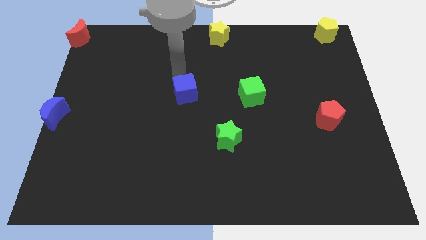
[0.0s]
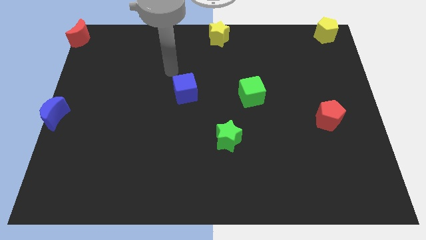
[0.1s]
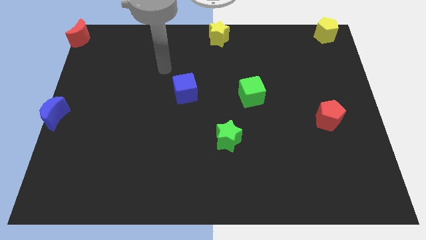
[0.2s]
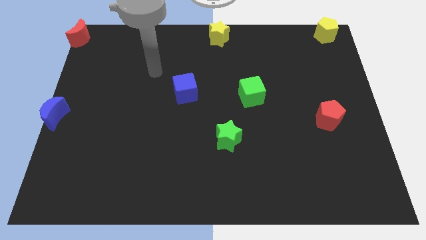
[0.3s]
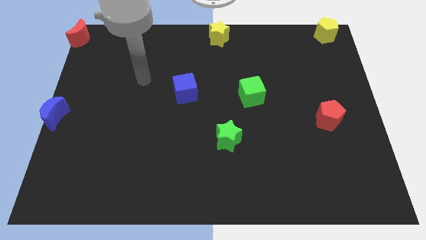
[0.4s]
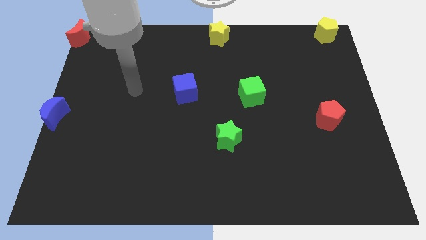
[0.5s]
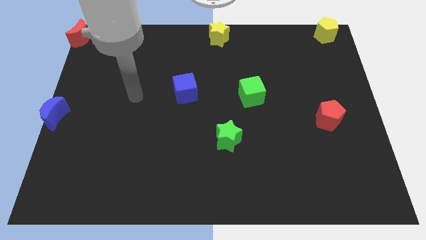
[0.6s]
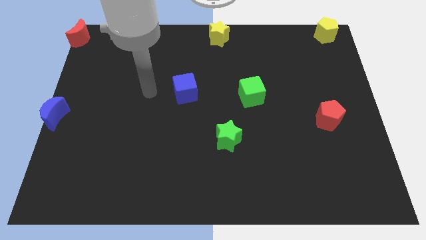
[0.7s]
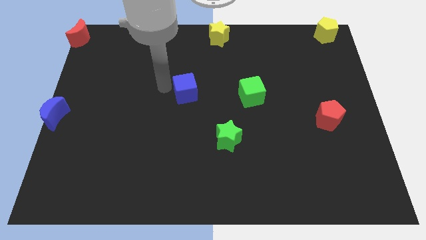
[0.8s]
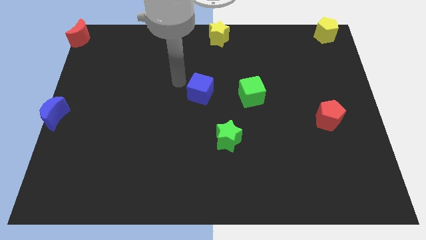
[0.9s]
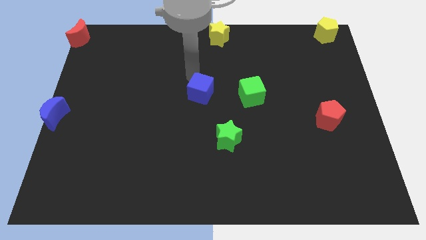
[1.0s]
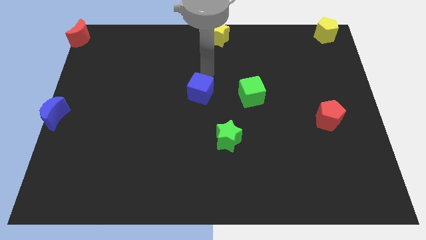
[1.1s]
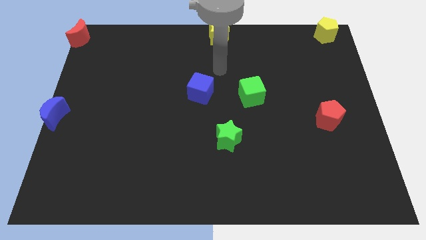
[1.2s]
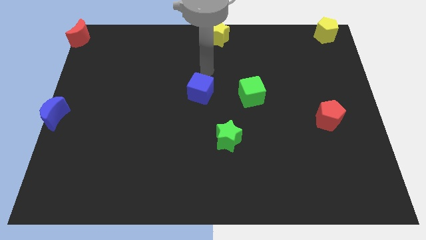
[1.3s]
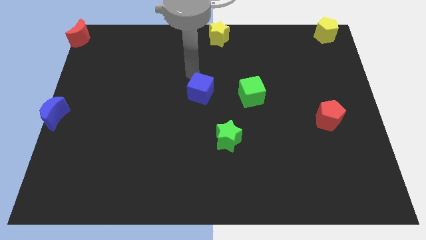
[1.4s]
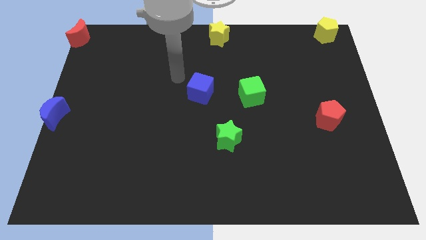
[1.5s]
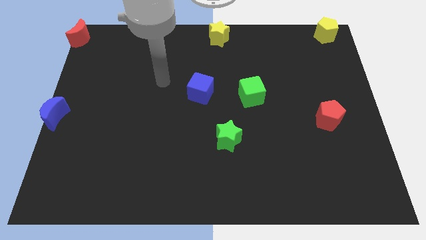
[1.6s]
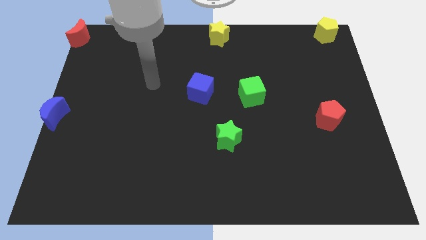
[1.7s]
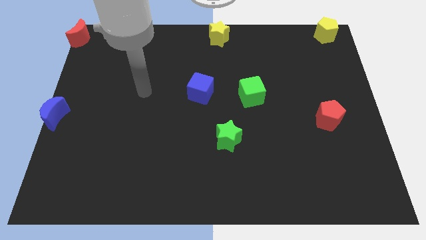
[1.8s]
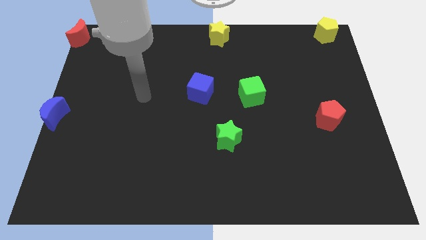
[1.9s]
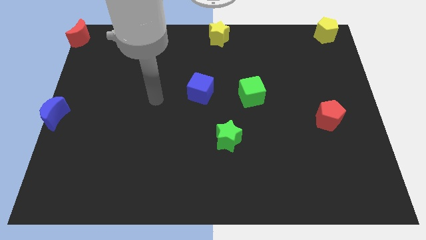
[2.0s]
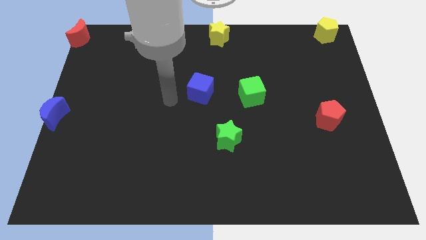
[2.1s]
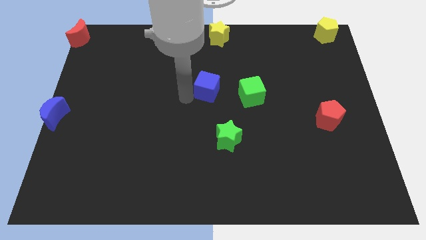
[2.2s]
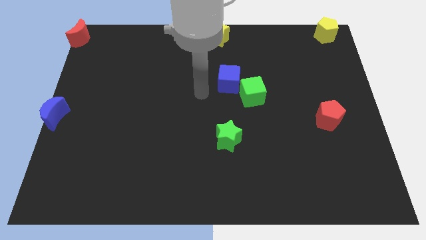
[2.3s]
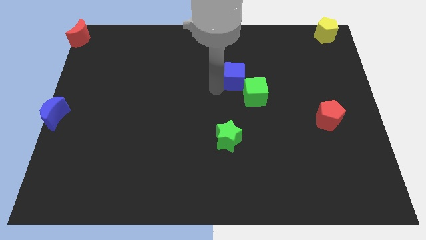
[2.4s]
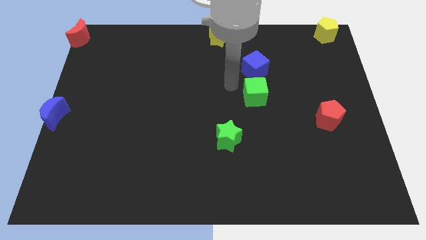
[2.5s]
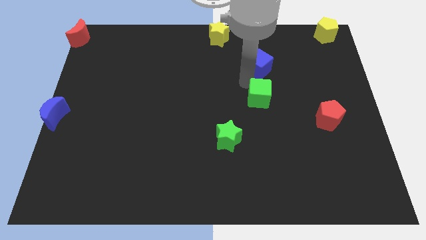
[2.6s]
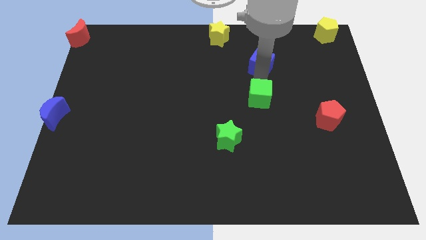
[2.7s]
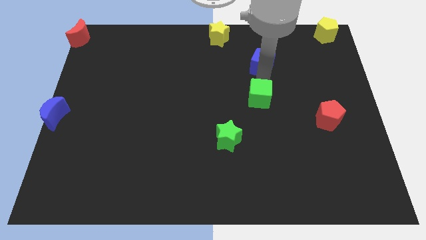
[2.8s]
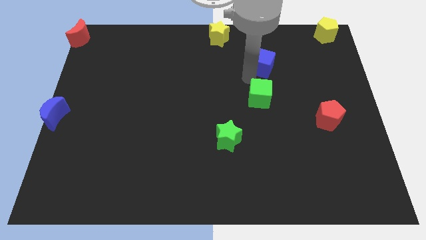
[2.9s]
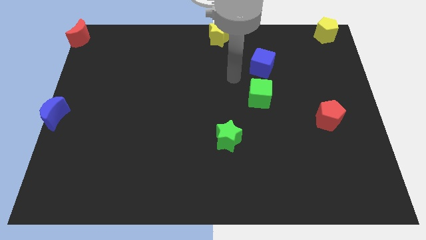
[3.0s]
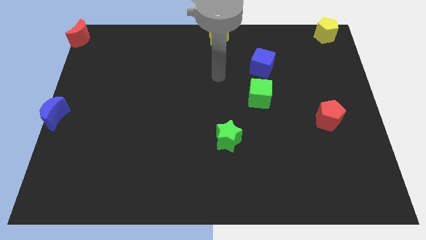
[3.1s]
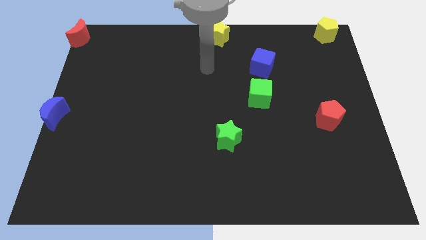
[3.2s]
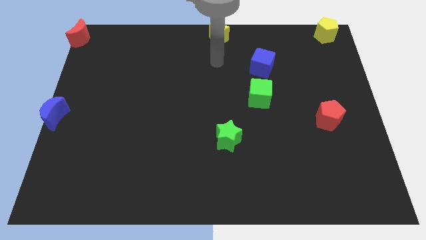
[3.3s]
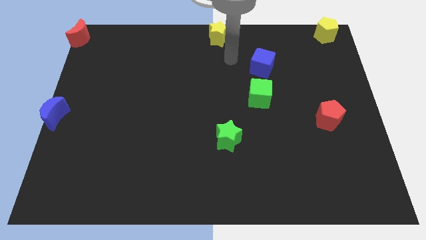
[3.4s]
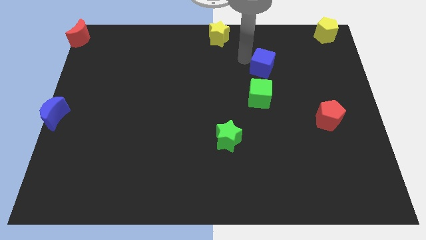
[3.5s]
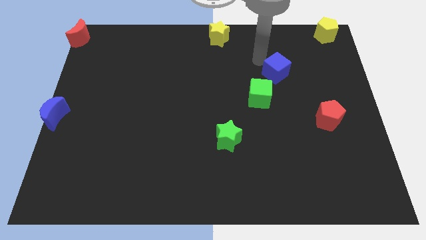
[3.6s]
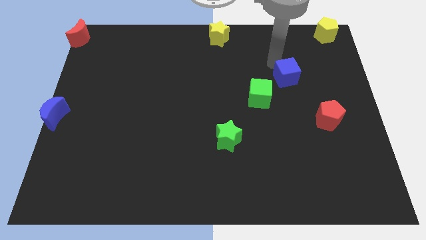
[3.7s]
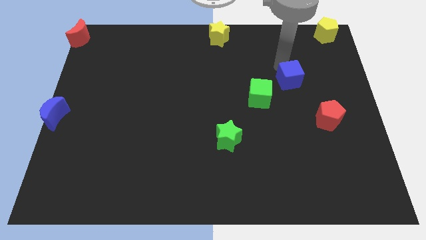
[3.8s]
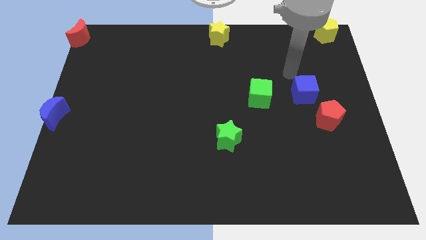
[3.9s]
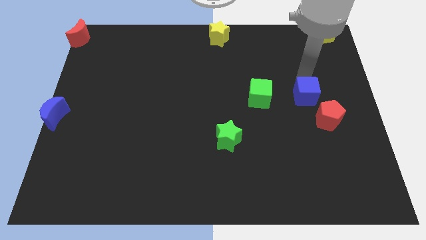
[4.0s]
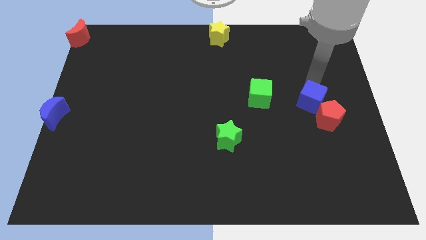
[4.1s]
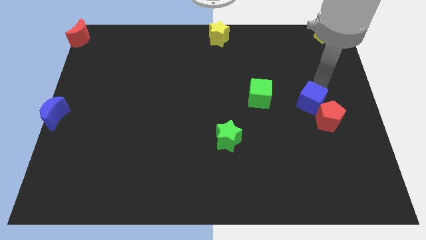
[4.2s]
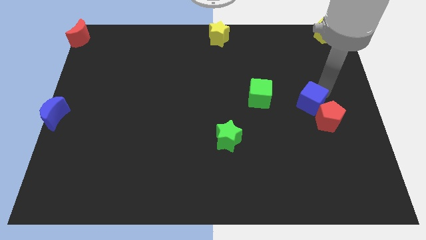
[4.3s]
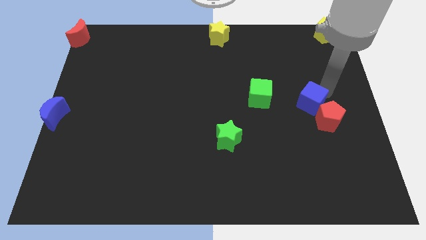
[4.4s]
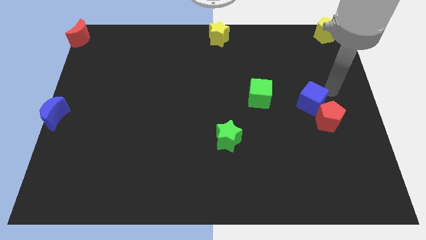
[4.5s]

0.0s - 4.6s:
push the blue cube into the red pentagon

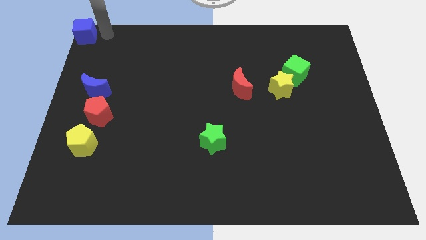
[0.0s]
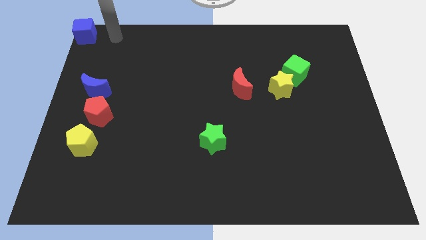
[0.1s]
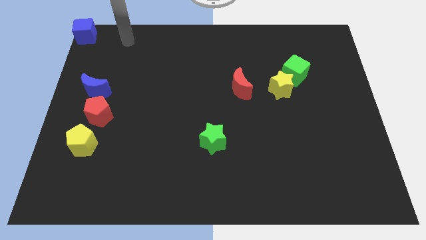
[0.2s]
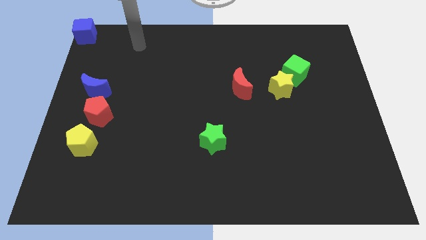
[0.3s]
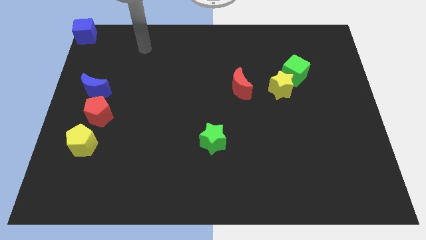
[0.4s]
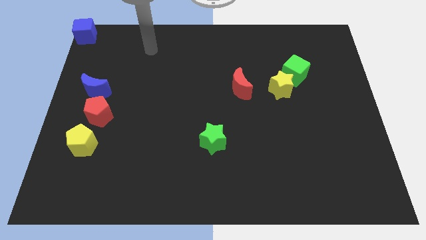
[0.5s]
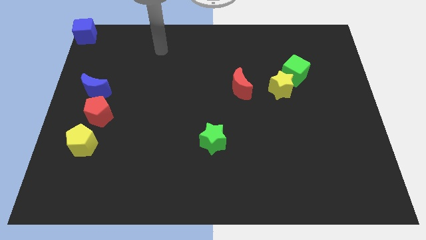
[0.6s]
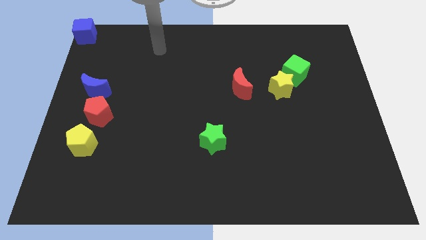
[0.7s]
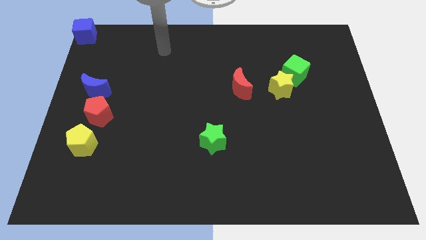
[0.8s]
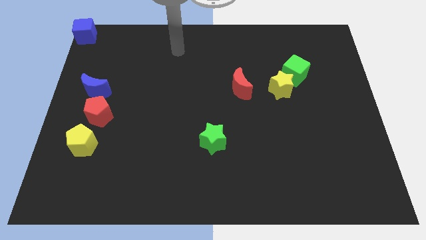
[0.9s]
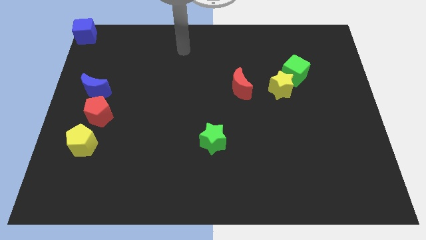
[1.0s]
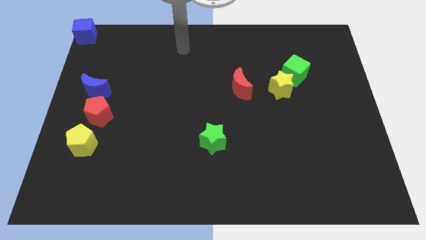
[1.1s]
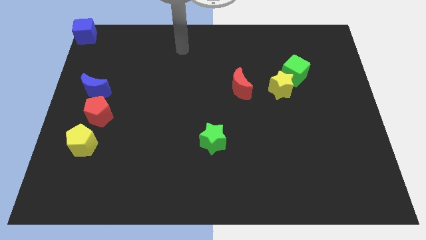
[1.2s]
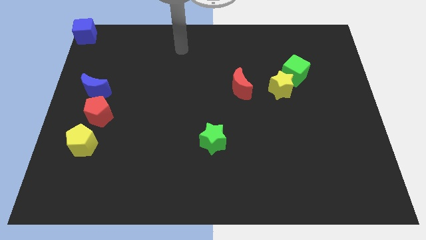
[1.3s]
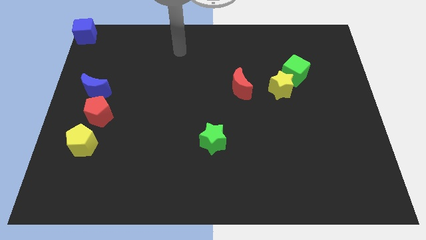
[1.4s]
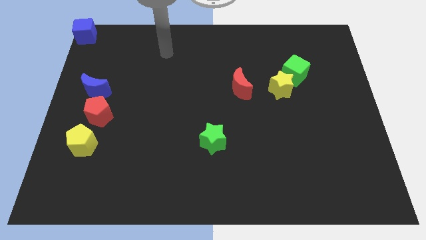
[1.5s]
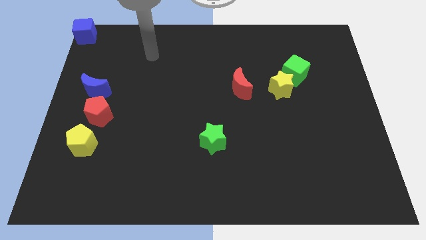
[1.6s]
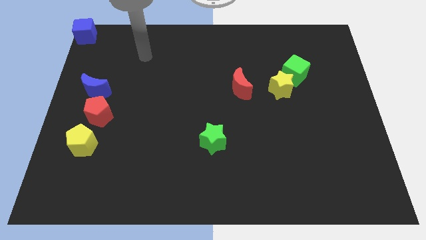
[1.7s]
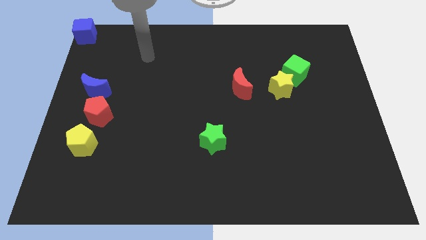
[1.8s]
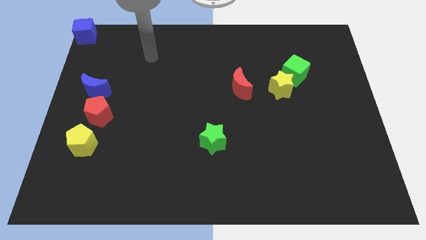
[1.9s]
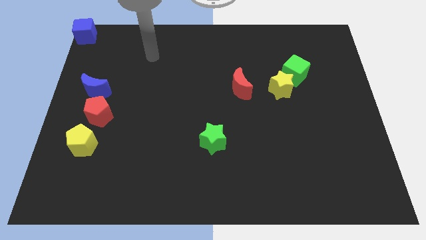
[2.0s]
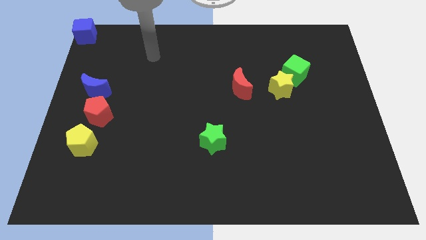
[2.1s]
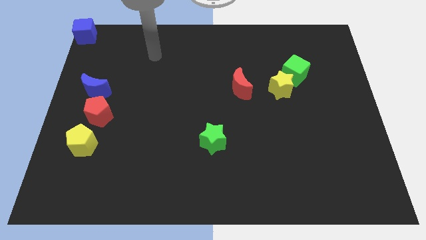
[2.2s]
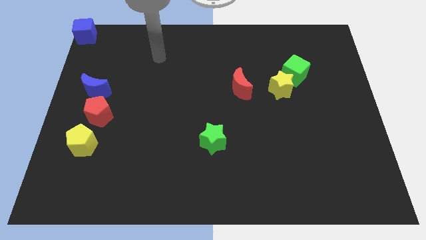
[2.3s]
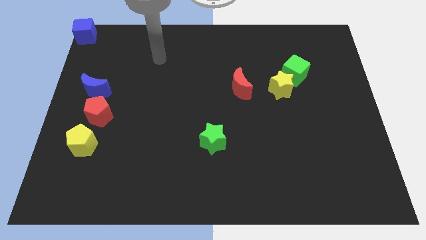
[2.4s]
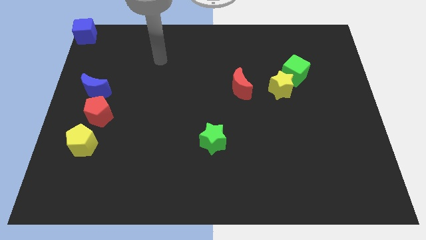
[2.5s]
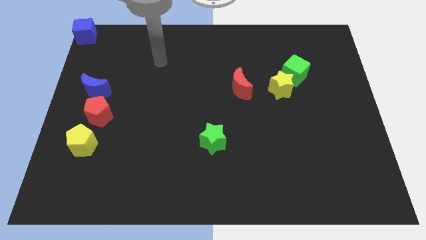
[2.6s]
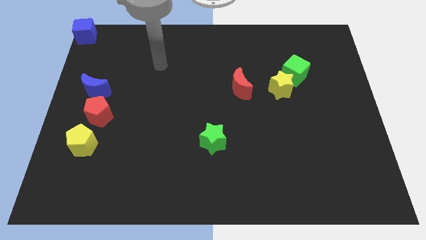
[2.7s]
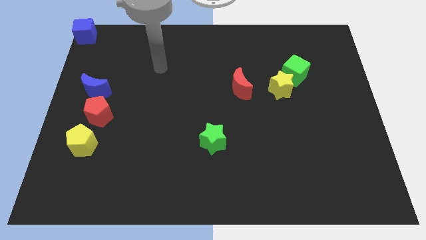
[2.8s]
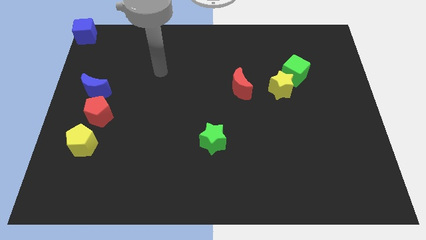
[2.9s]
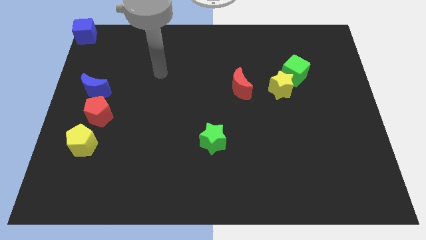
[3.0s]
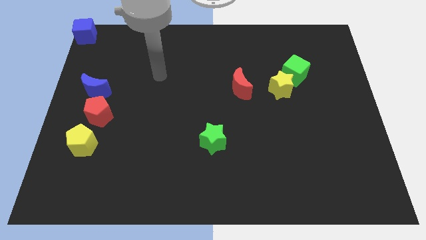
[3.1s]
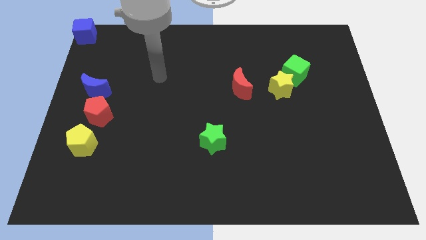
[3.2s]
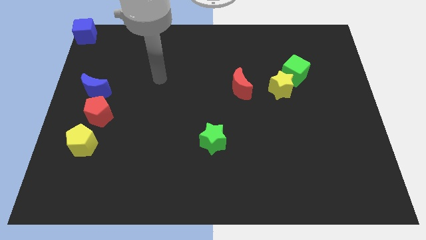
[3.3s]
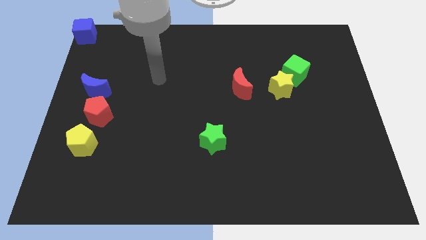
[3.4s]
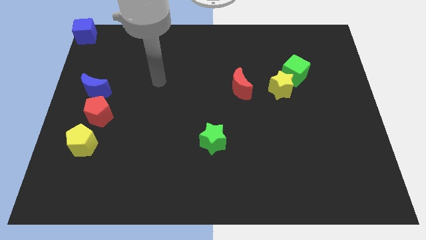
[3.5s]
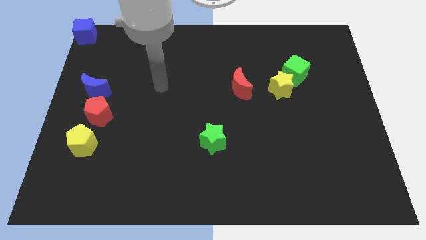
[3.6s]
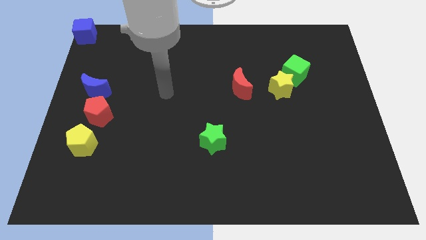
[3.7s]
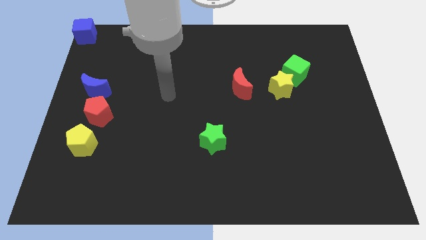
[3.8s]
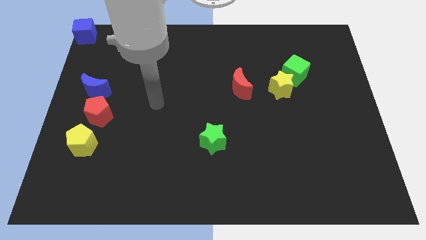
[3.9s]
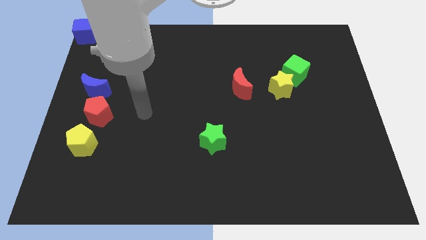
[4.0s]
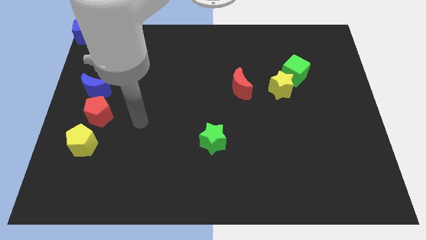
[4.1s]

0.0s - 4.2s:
place your hand parallel right to the red pentagon

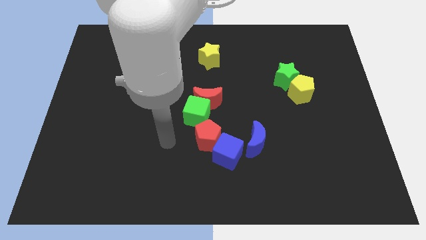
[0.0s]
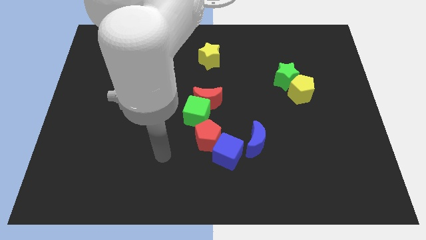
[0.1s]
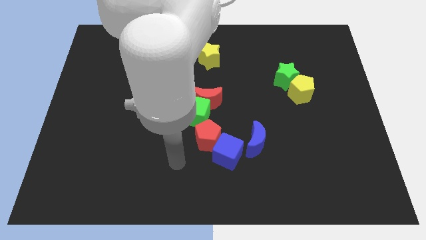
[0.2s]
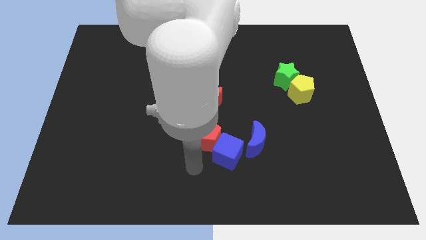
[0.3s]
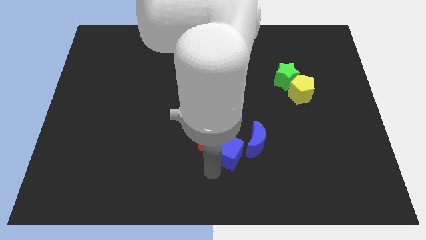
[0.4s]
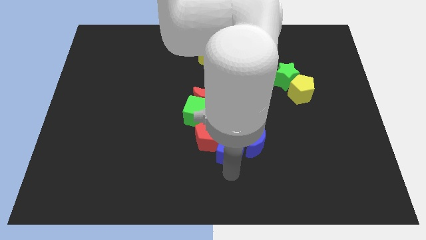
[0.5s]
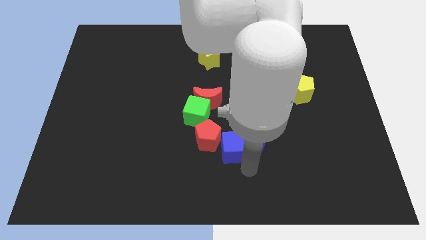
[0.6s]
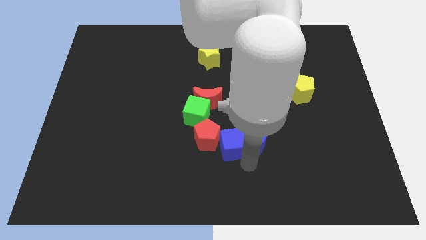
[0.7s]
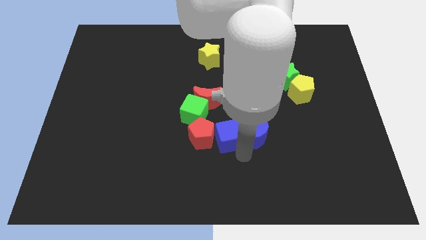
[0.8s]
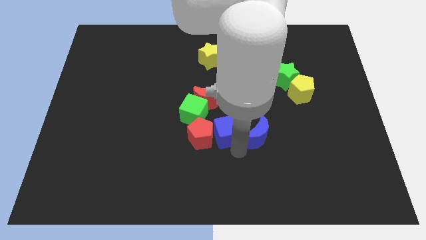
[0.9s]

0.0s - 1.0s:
place blue cube to the right of red pentagon
